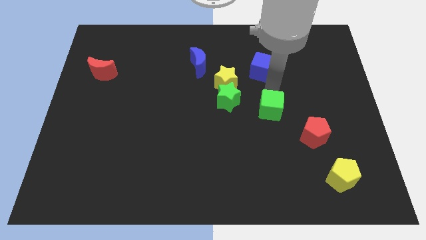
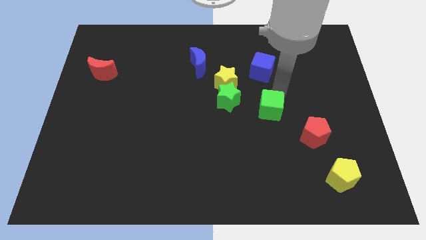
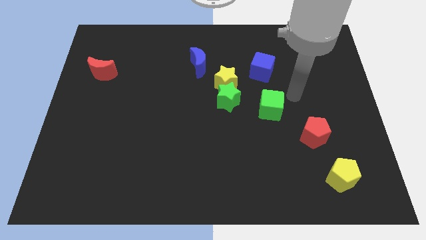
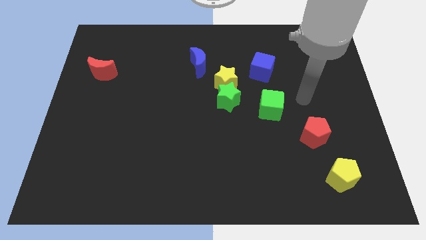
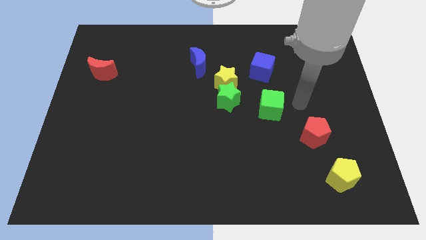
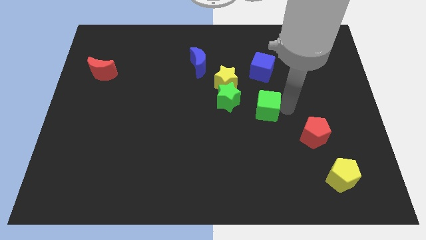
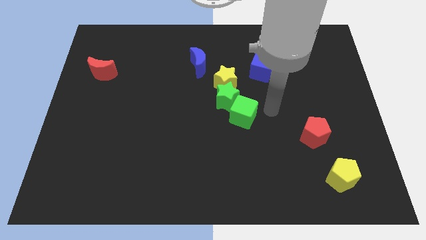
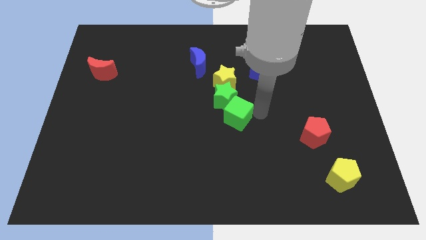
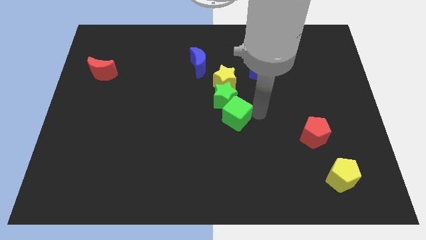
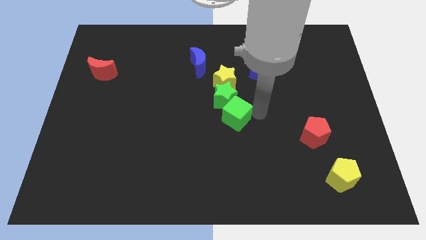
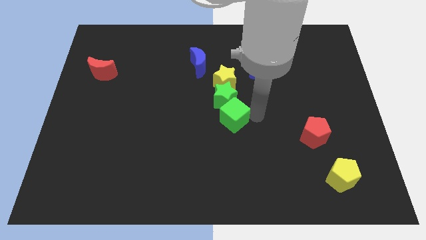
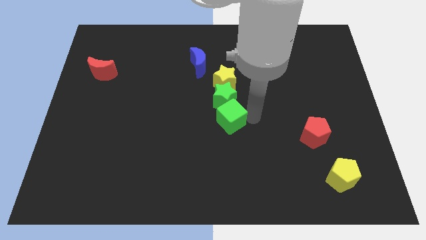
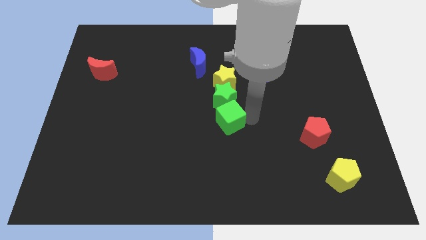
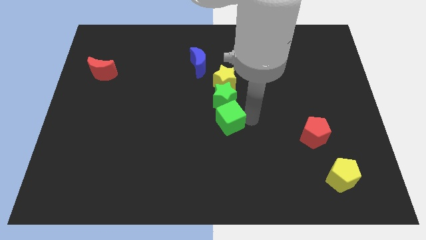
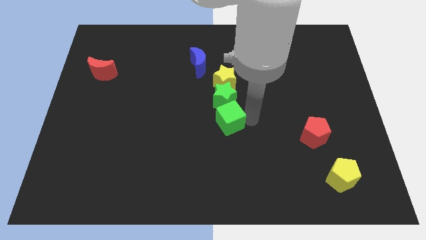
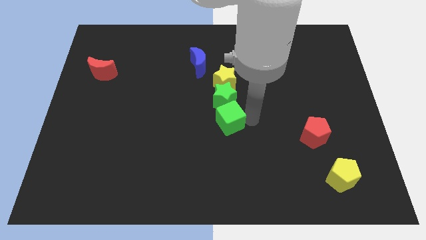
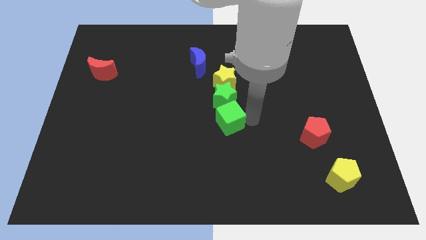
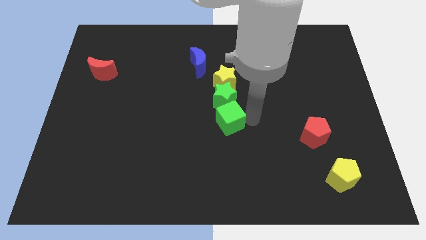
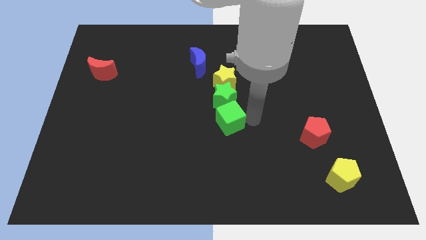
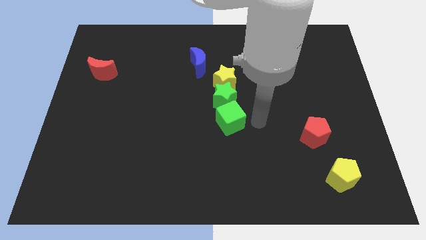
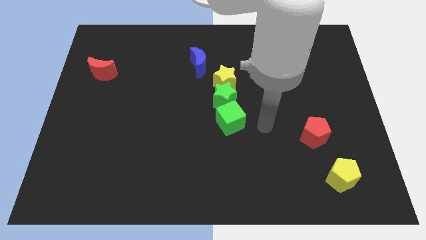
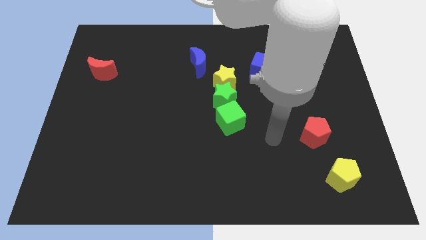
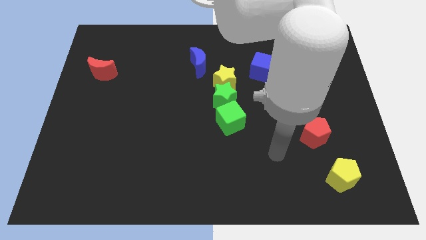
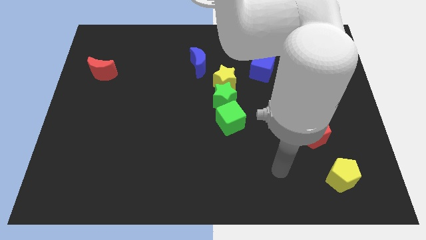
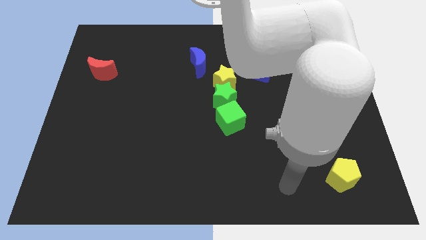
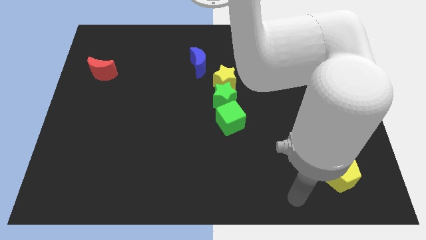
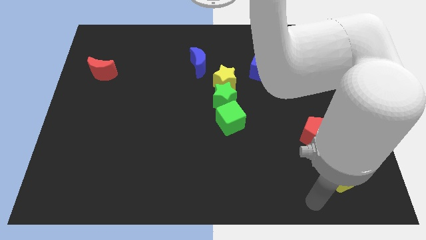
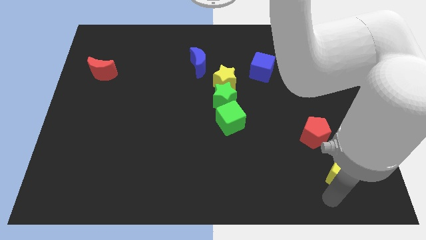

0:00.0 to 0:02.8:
place the green cube below to the green star

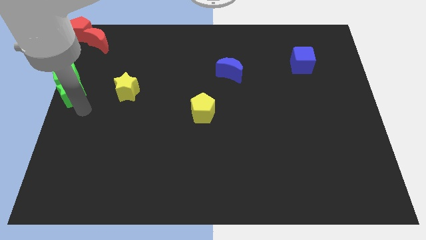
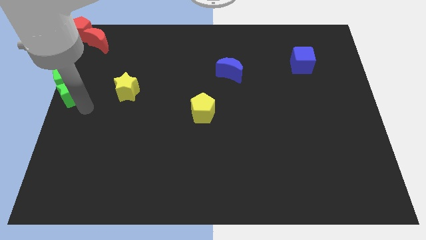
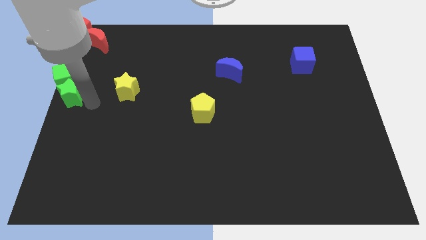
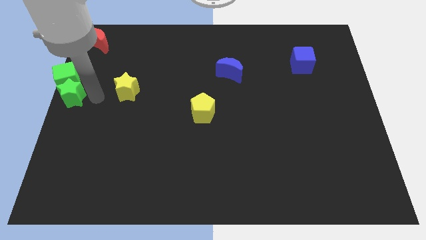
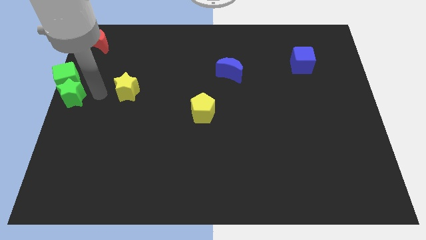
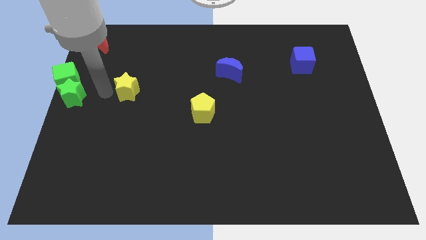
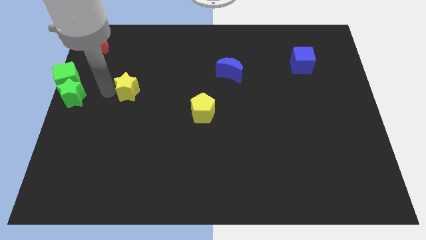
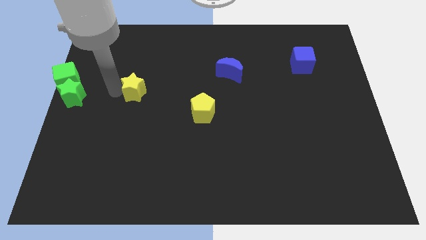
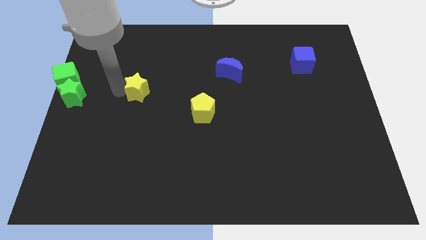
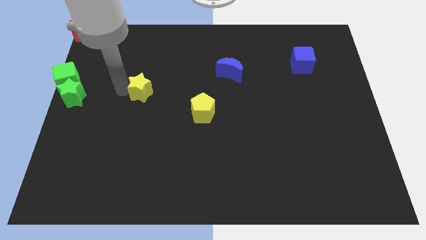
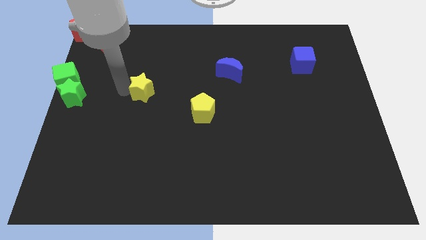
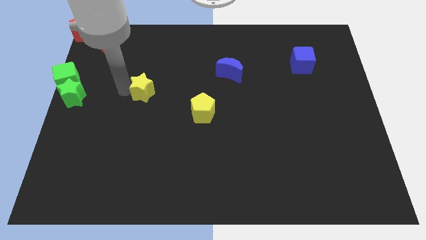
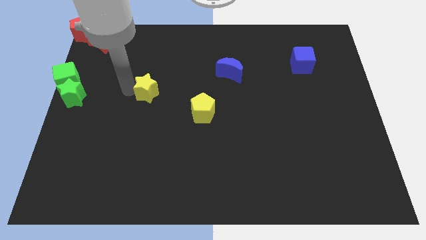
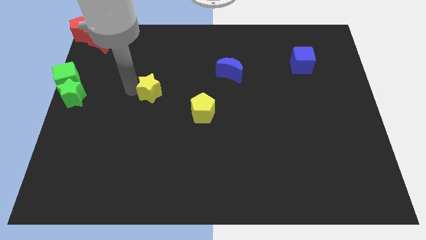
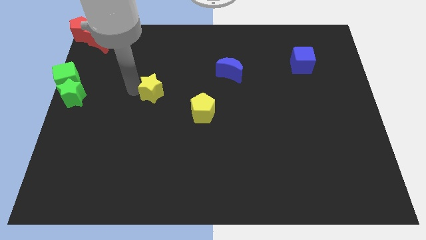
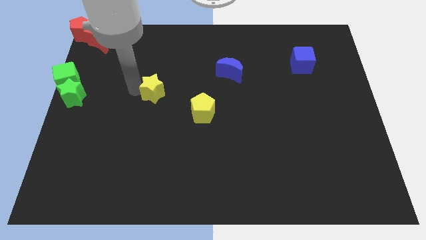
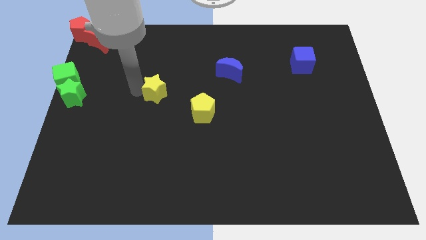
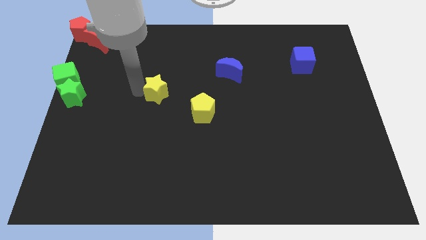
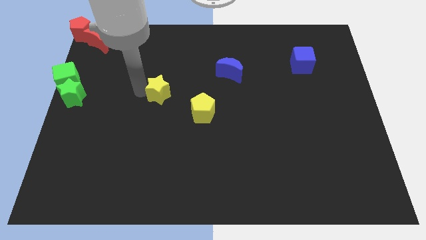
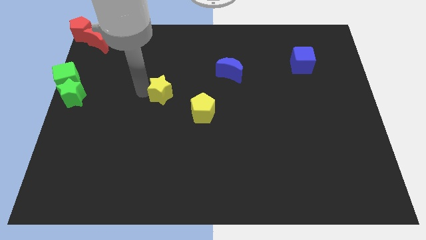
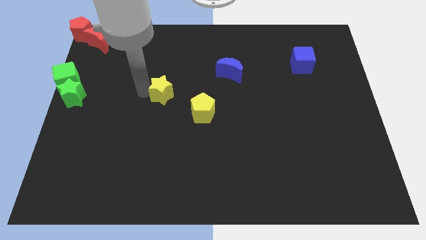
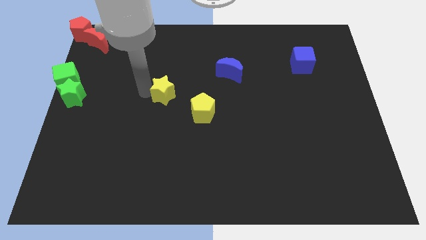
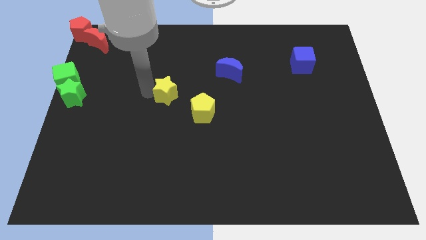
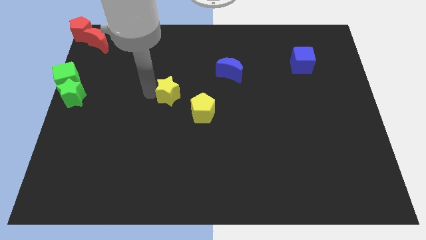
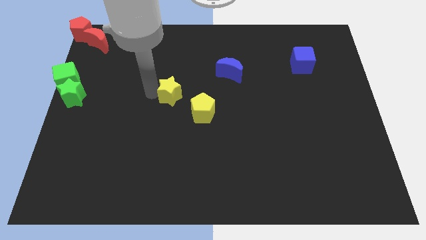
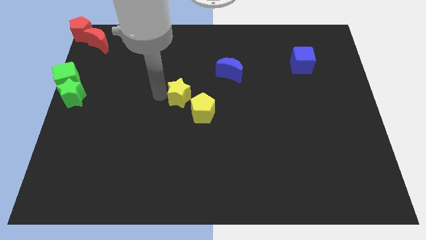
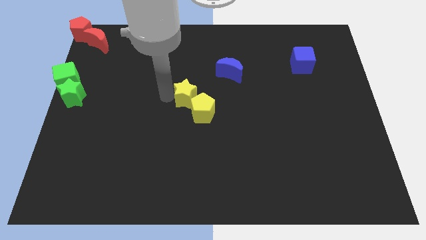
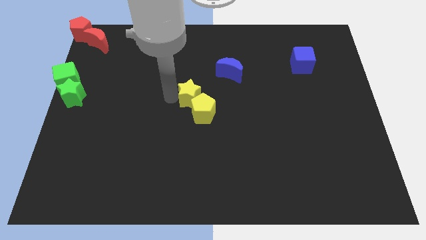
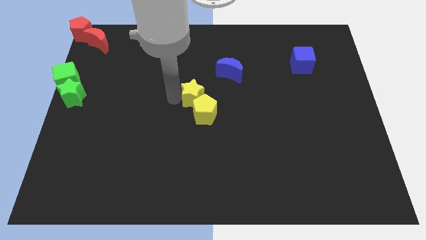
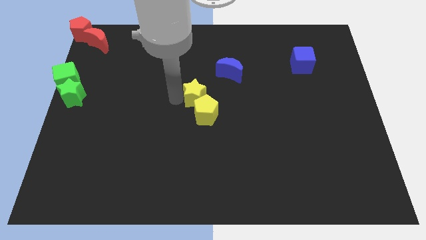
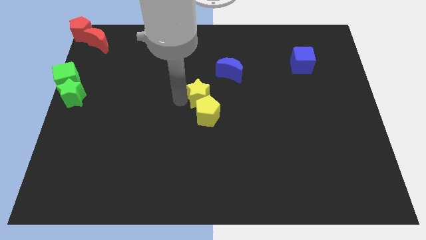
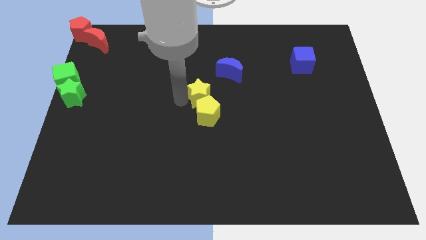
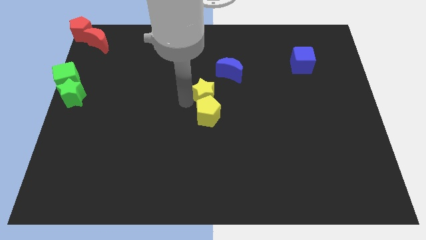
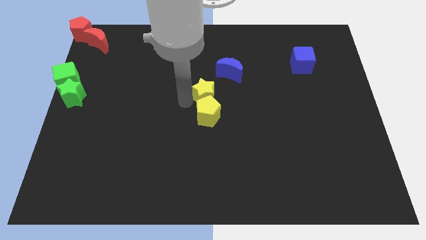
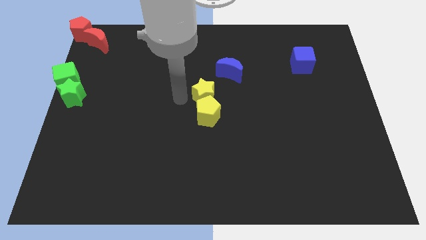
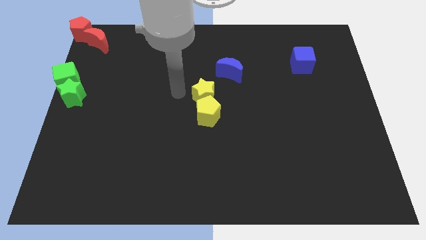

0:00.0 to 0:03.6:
move the yellow star into the yellow pentagon

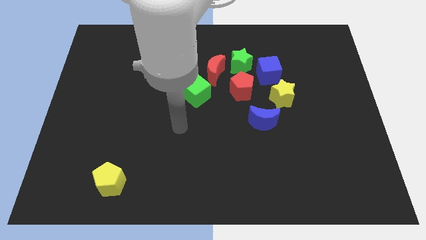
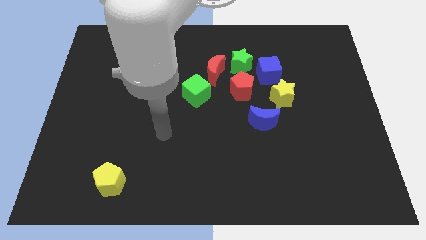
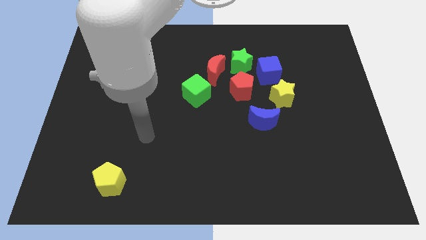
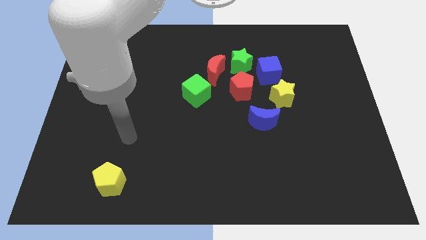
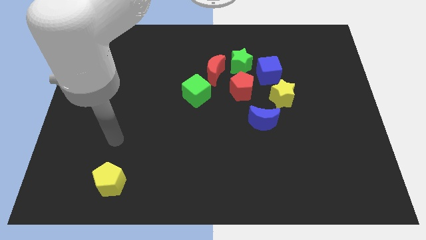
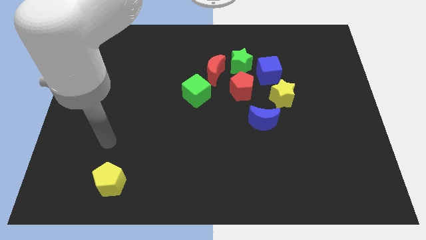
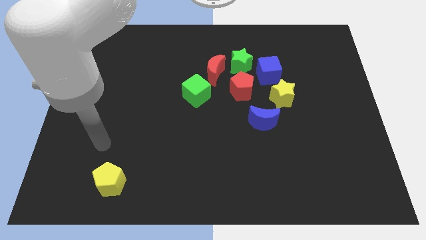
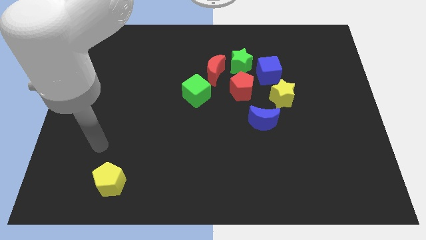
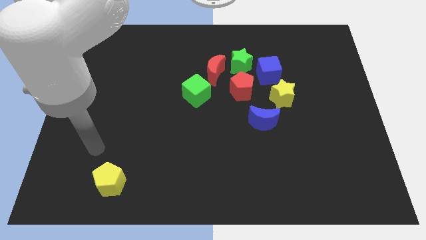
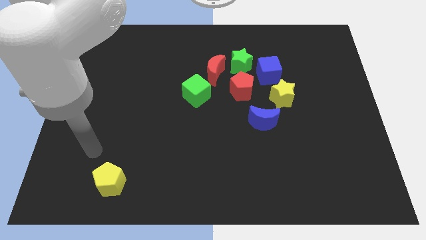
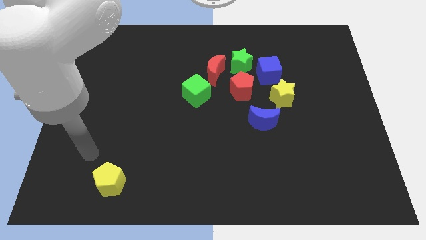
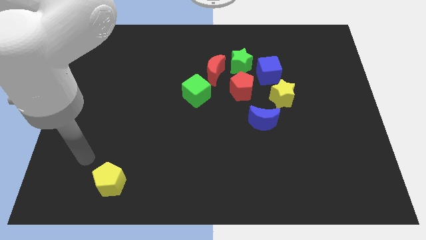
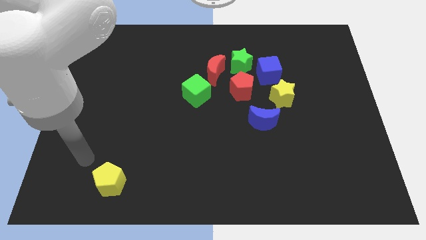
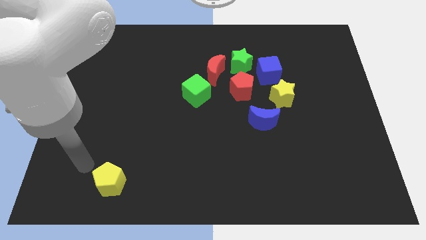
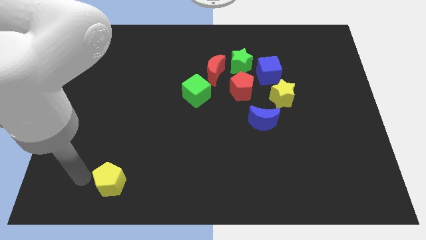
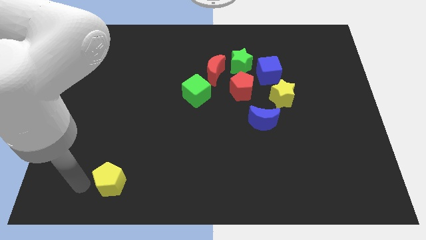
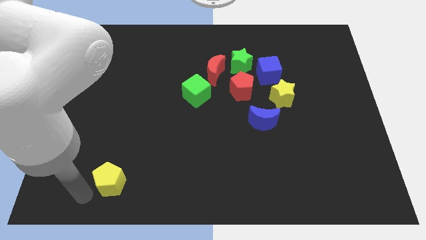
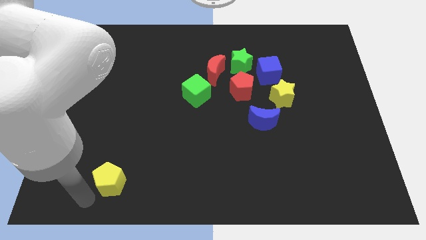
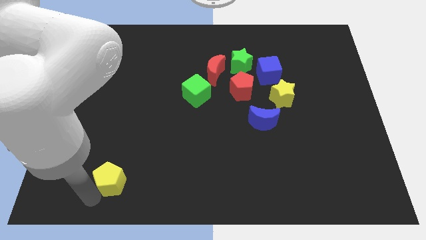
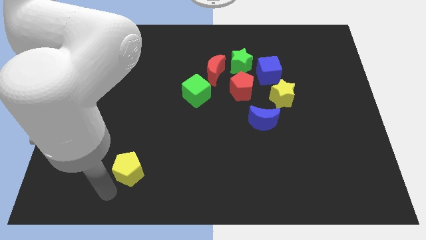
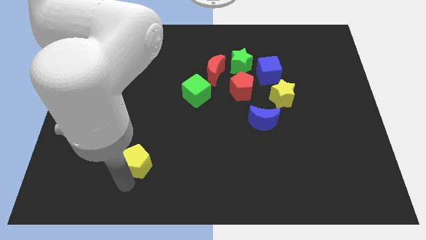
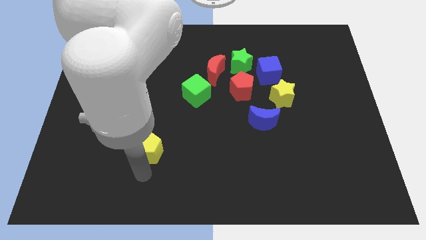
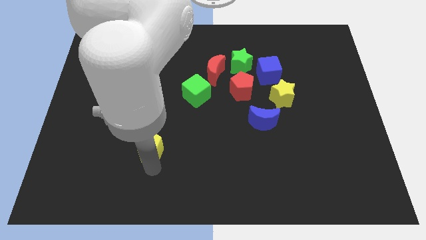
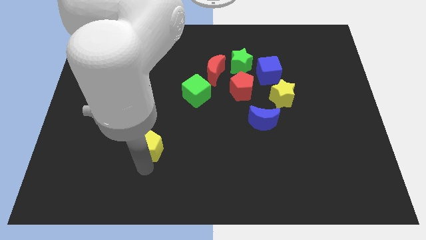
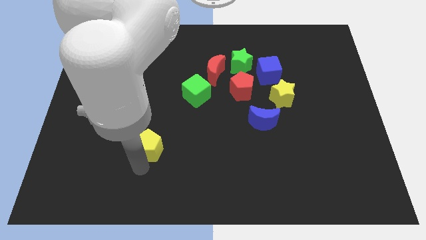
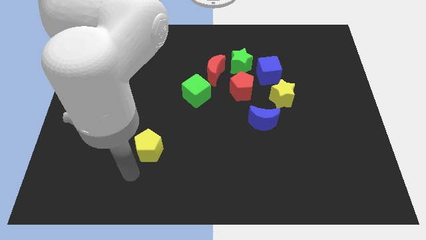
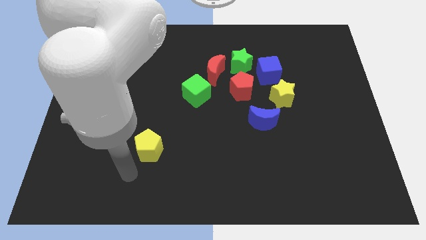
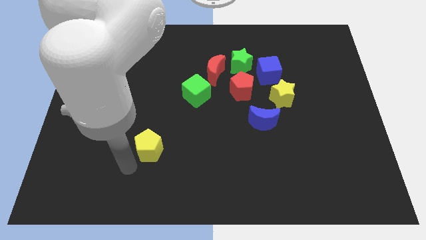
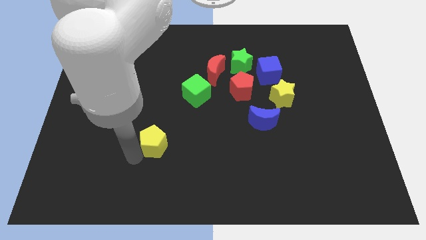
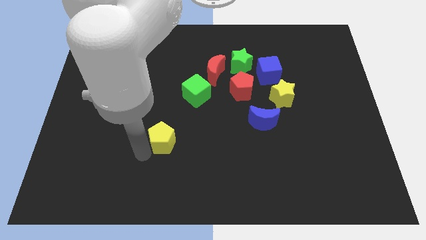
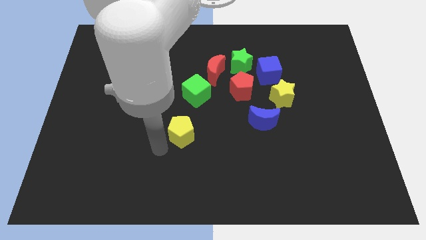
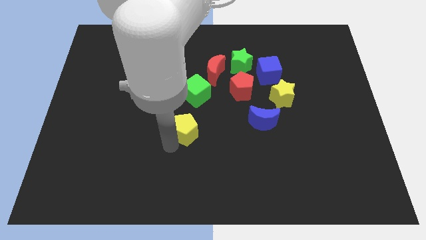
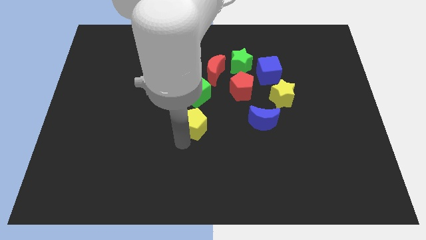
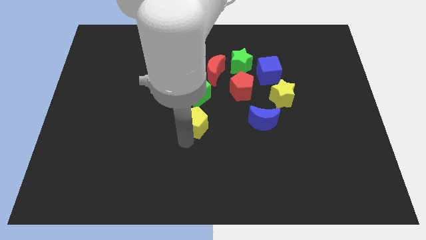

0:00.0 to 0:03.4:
place the yellow pentagon below the green cube
